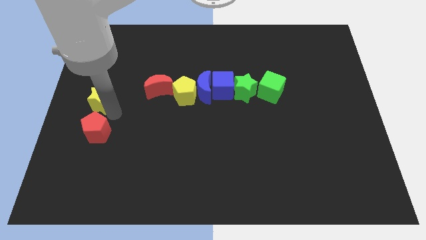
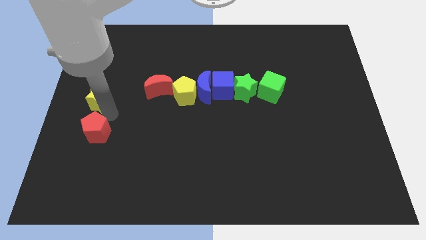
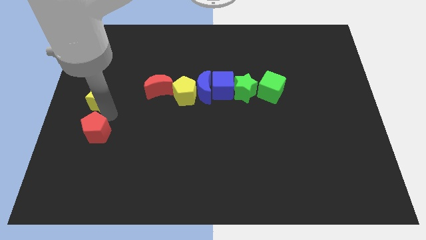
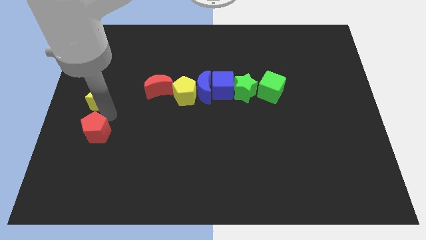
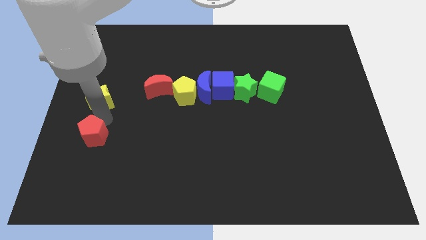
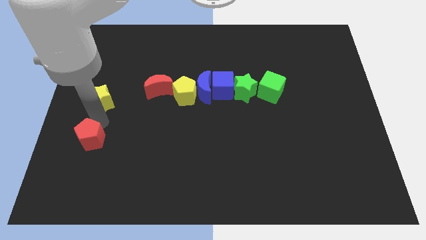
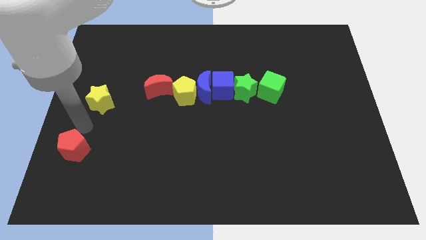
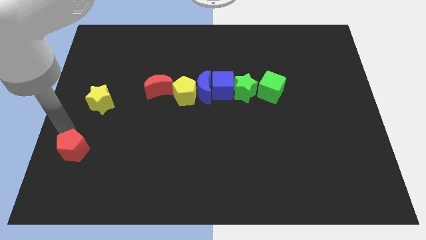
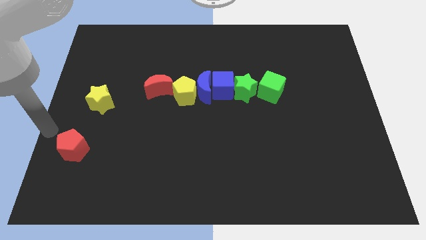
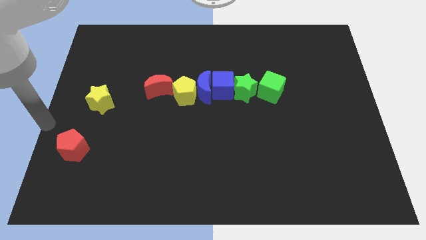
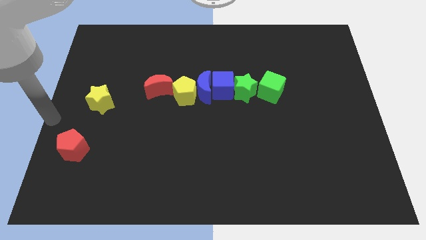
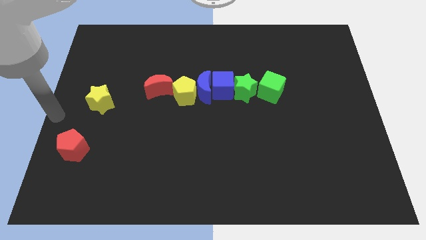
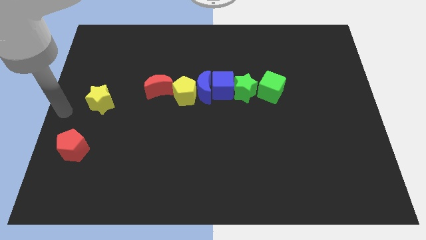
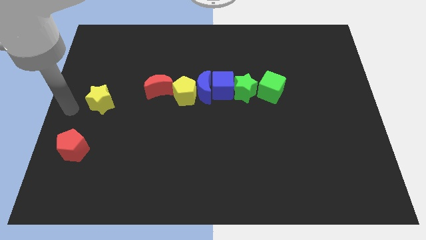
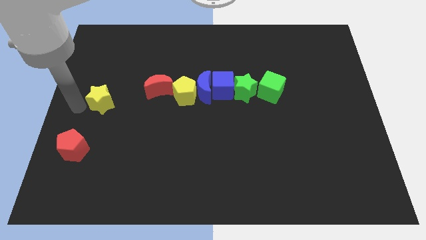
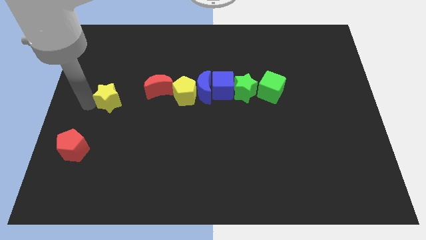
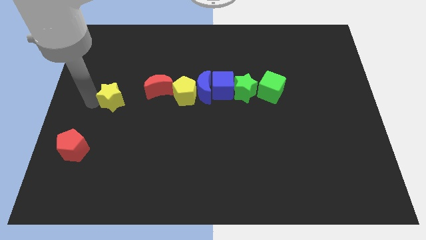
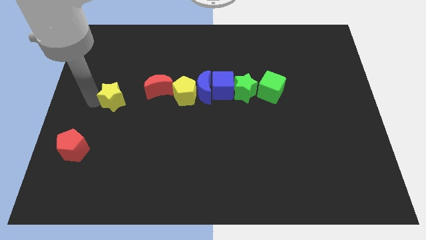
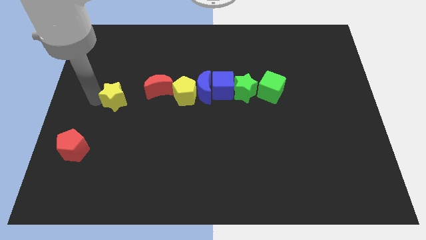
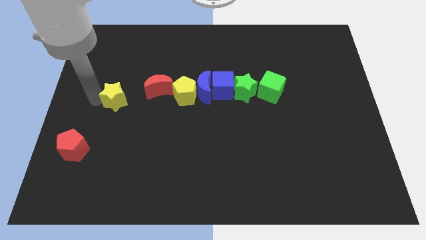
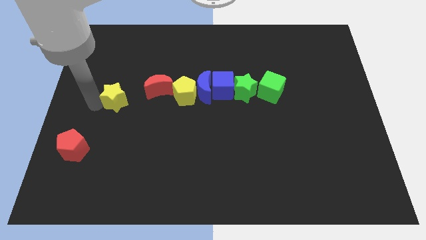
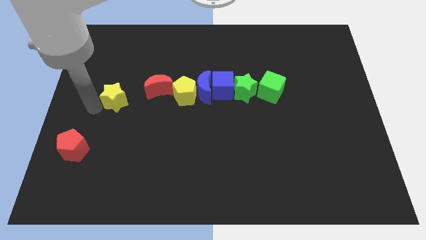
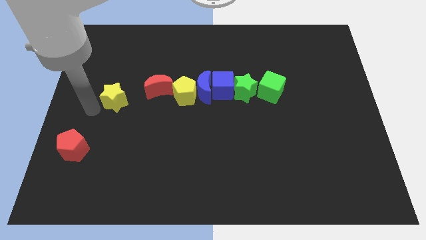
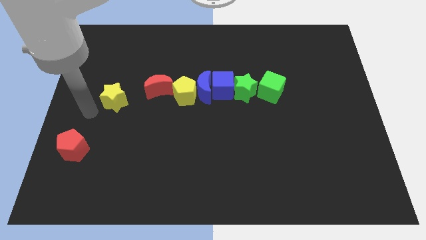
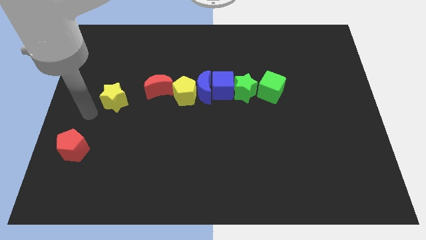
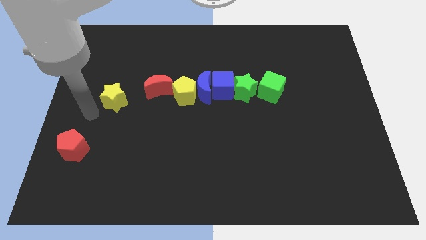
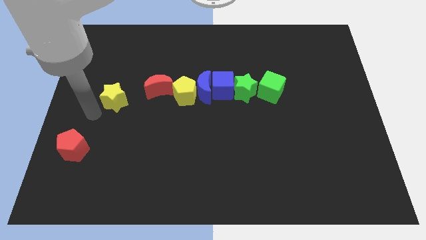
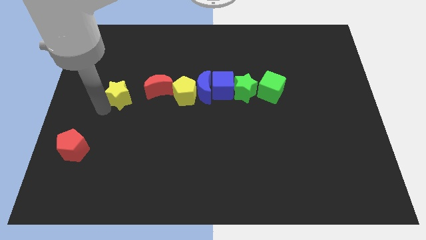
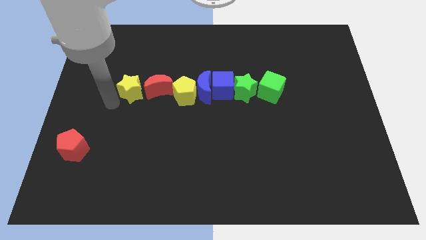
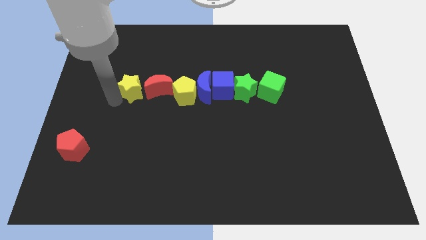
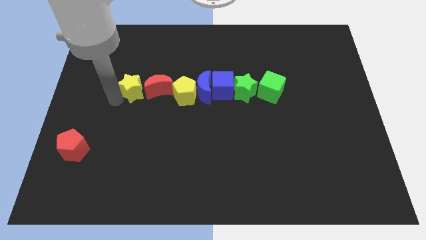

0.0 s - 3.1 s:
separate yellow star and red pentagon

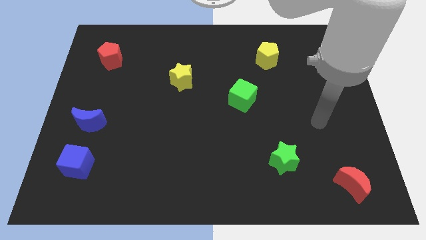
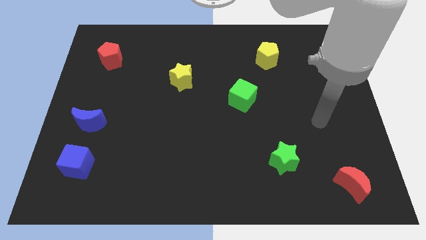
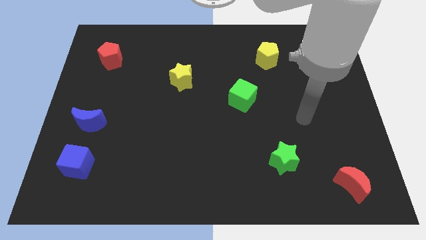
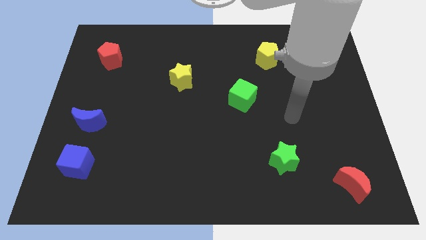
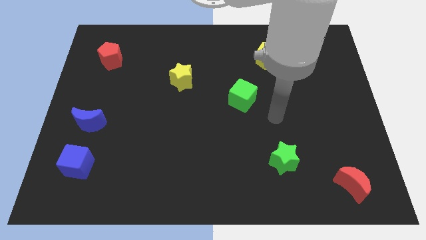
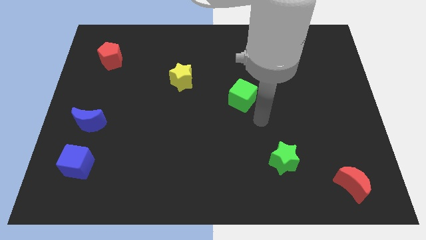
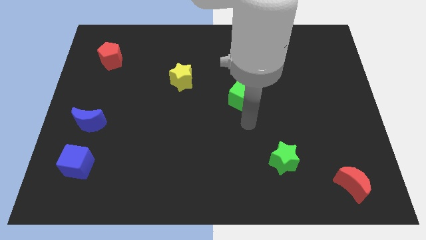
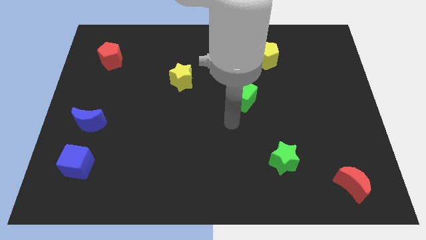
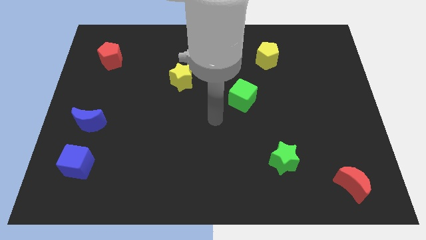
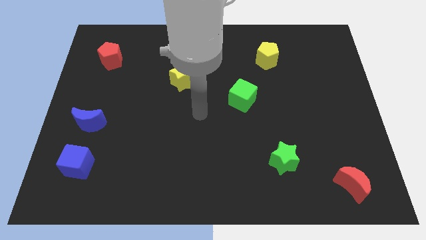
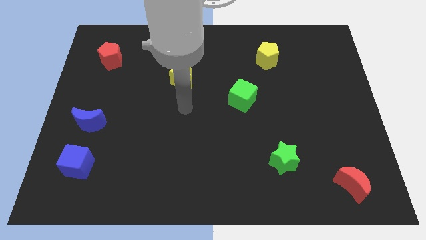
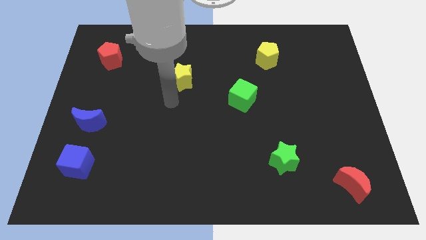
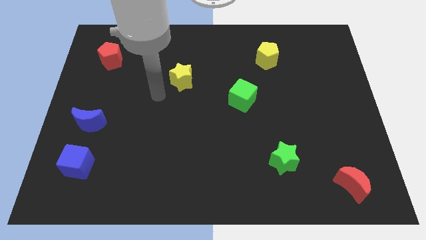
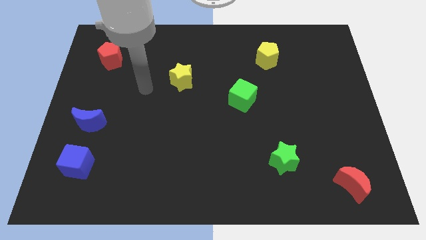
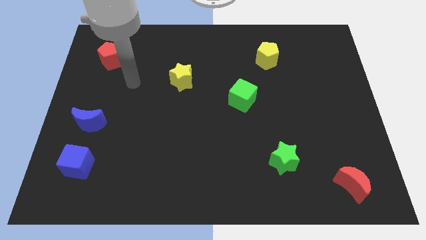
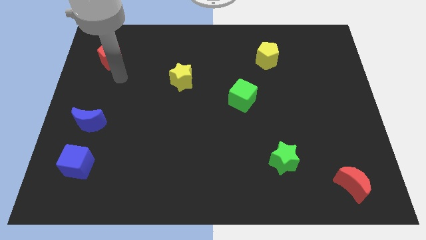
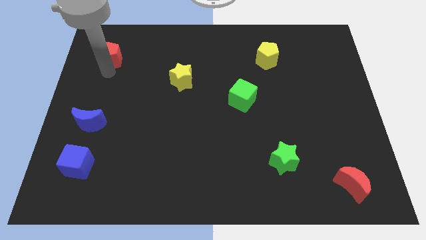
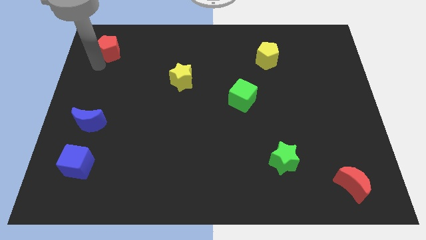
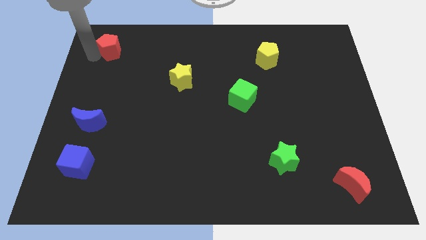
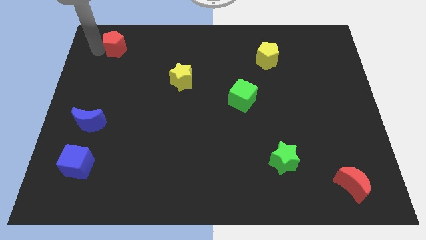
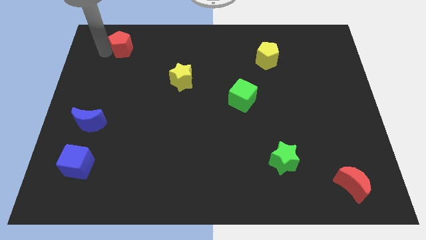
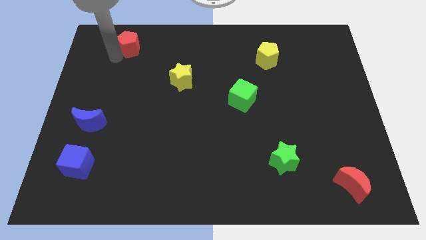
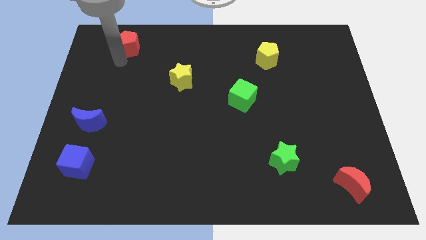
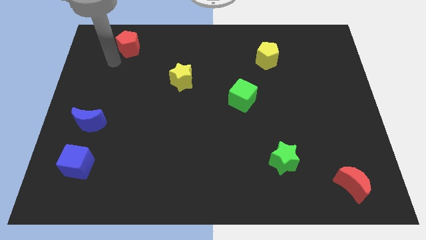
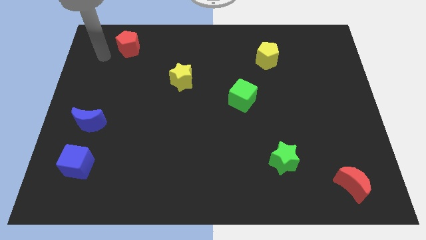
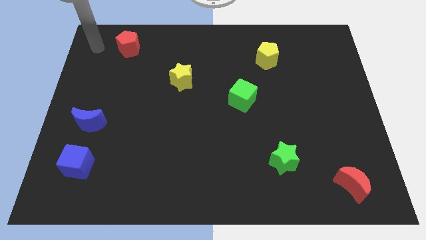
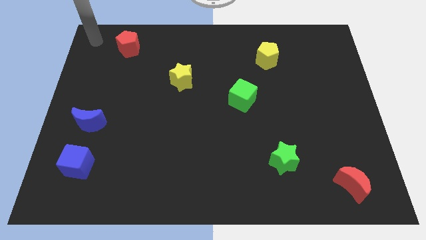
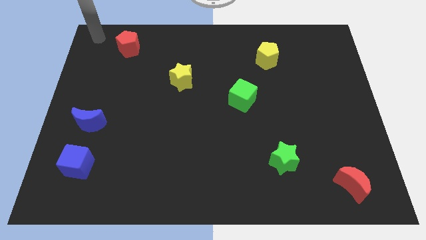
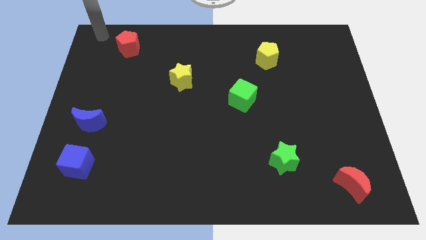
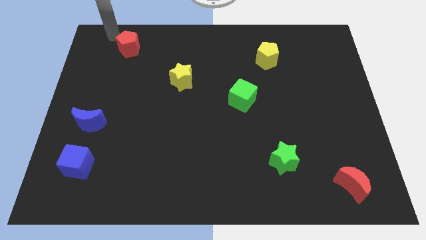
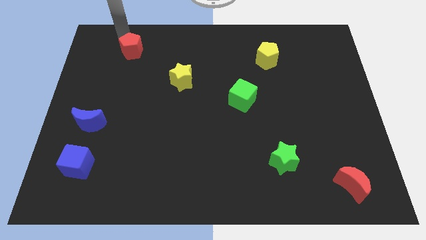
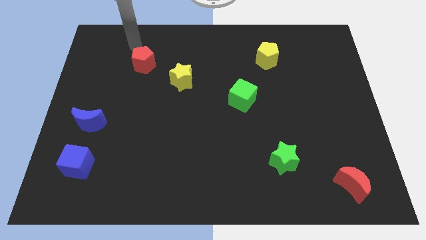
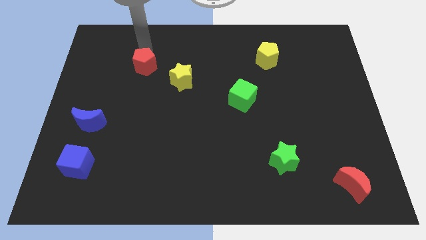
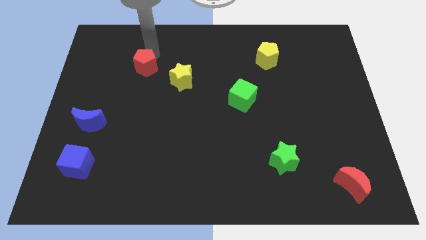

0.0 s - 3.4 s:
push the red pentagon to the top left of the yellow star

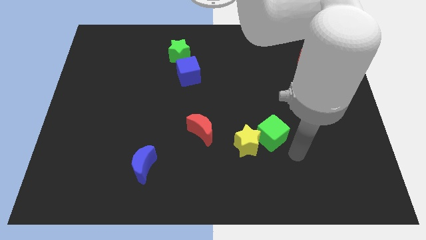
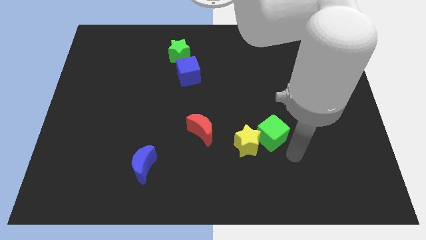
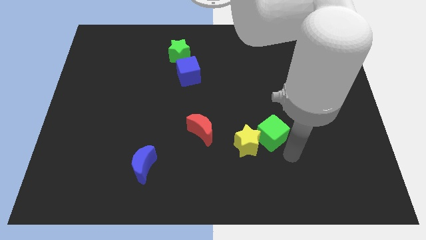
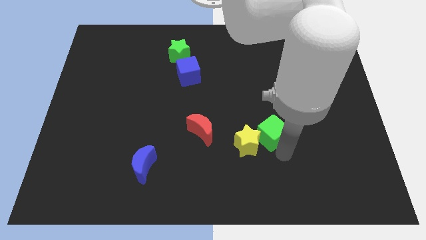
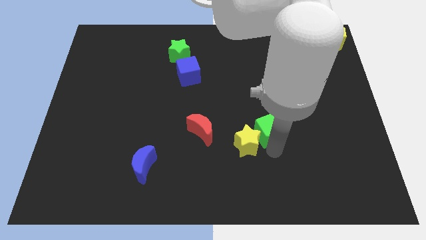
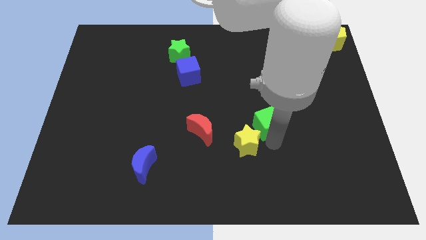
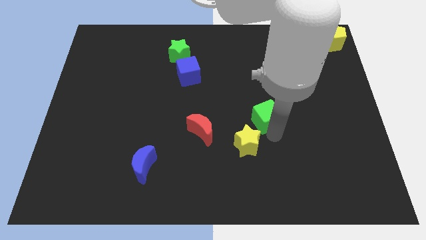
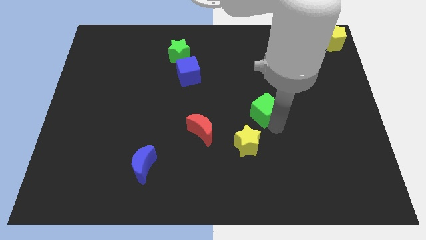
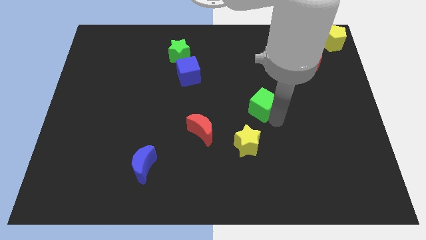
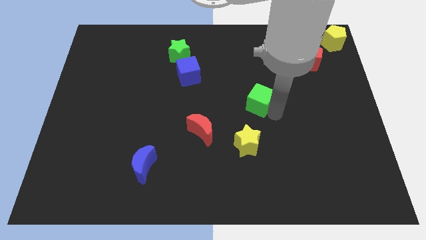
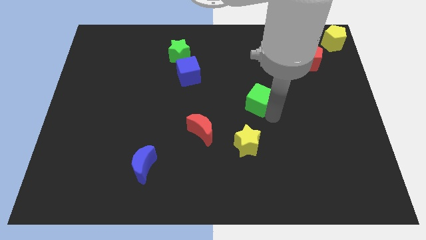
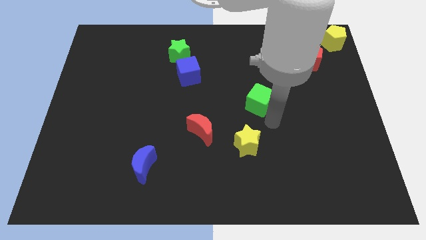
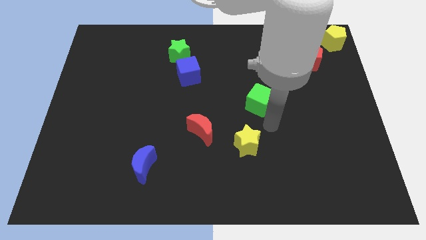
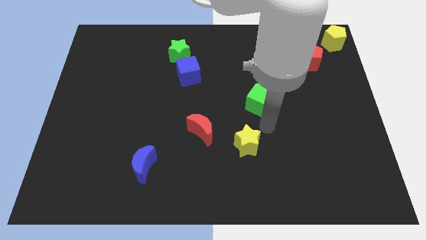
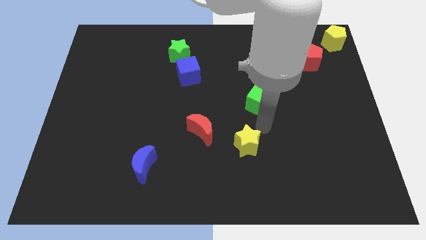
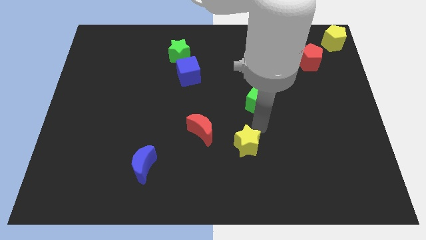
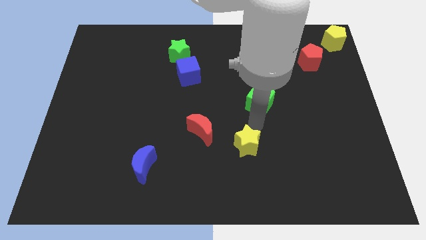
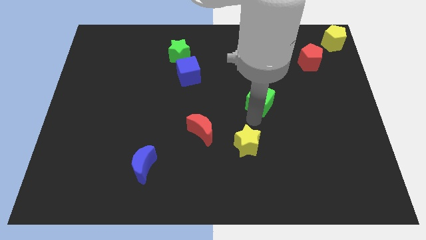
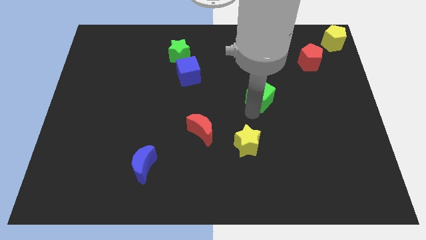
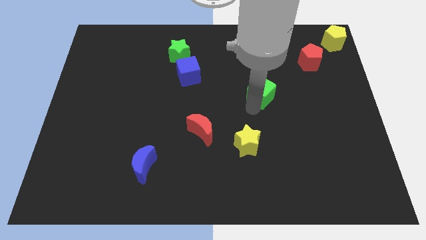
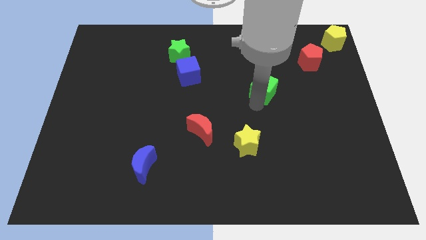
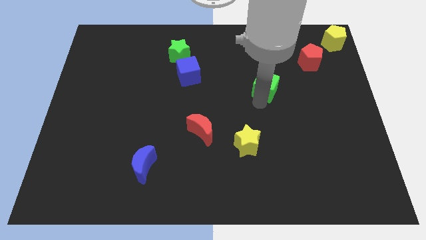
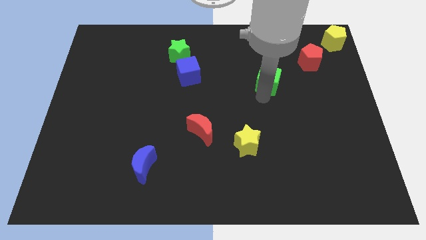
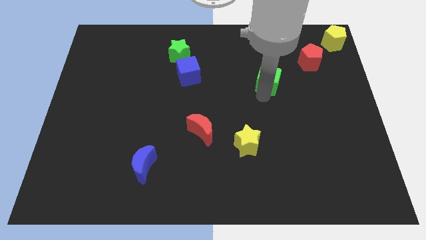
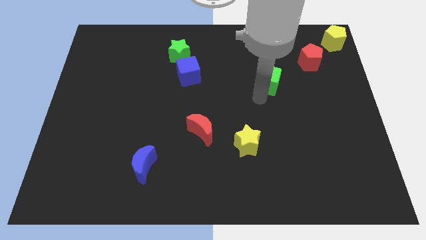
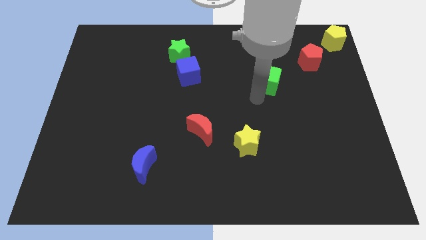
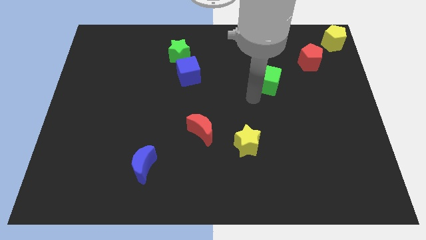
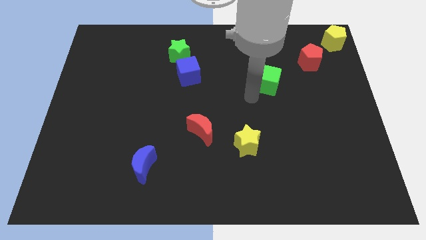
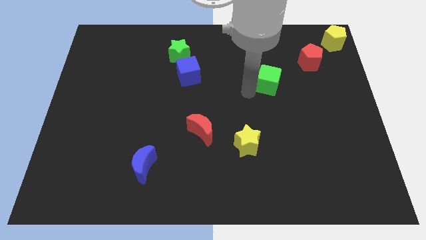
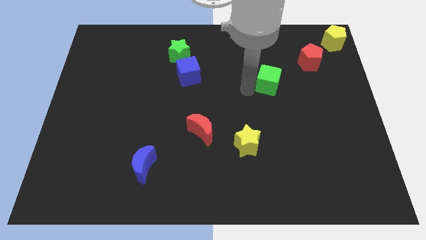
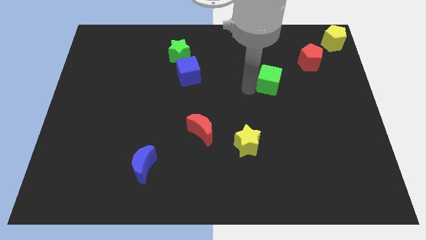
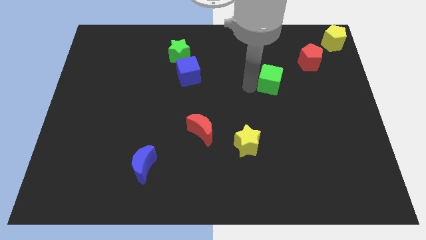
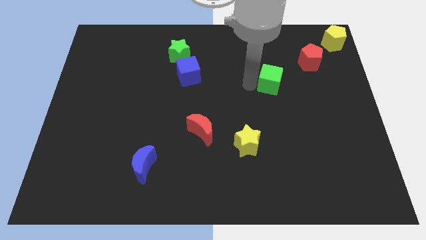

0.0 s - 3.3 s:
move the green cube towards the center of the board
